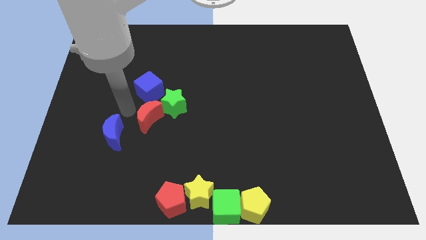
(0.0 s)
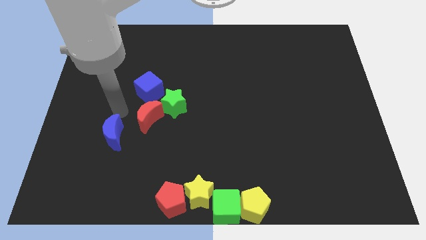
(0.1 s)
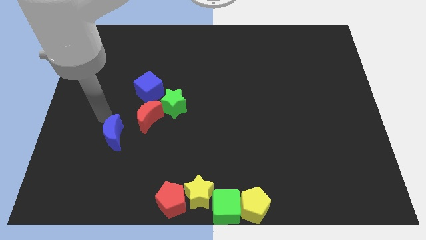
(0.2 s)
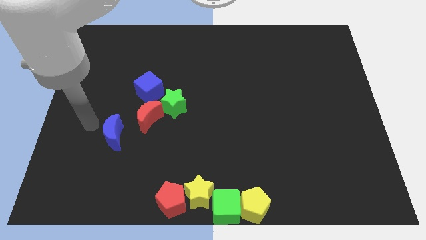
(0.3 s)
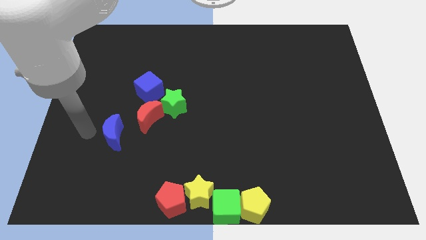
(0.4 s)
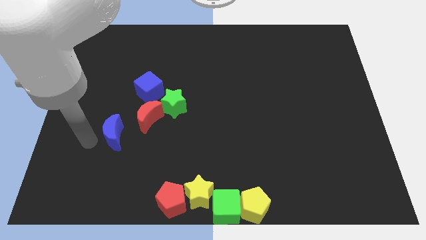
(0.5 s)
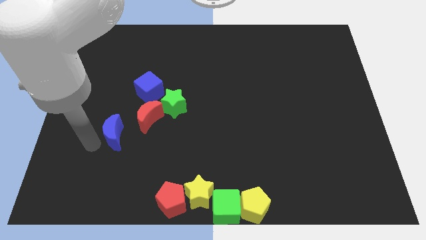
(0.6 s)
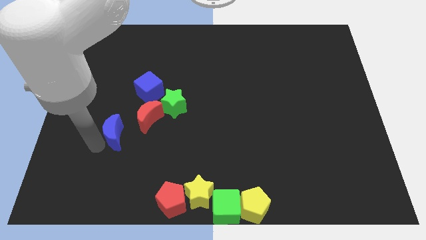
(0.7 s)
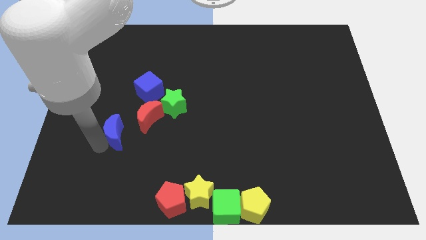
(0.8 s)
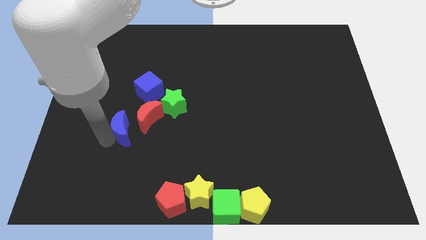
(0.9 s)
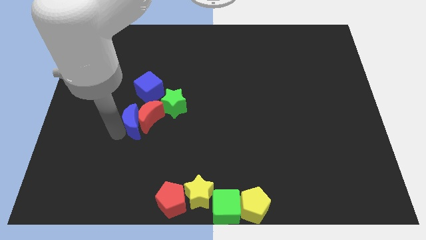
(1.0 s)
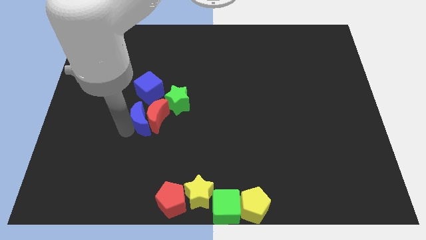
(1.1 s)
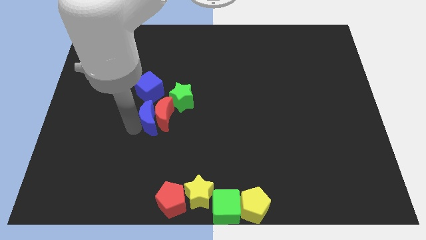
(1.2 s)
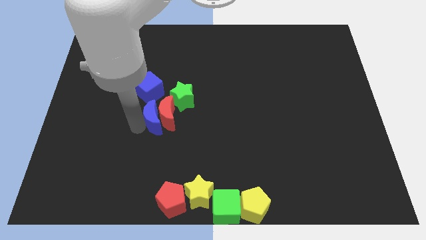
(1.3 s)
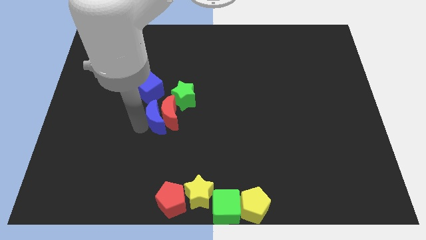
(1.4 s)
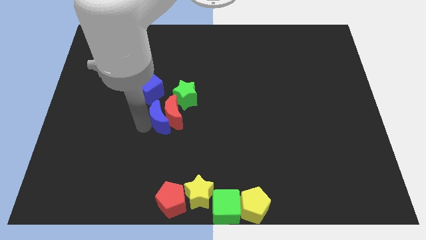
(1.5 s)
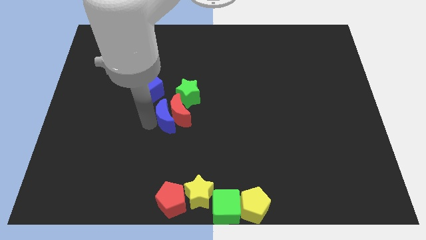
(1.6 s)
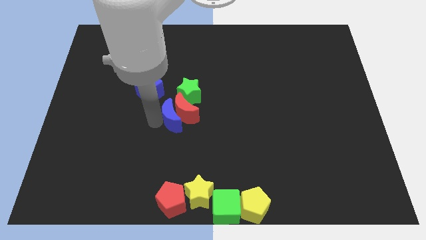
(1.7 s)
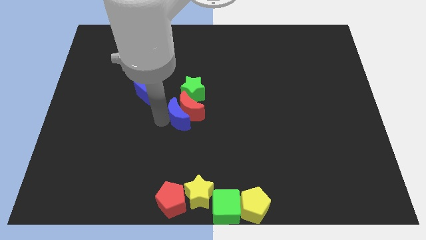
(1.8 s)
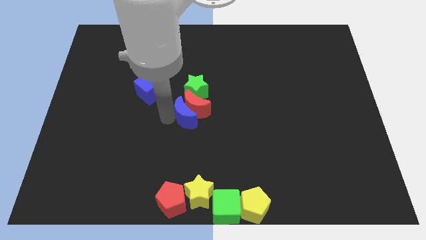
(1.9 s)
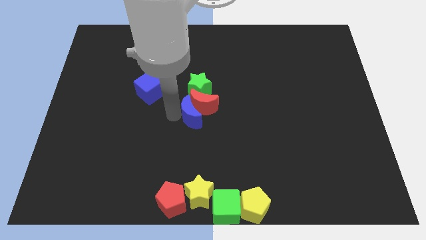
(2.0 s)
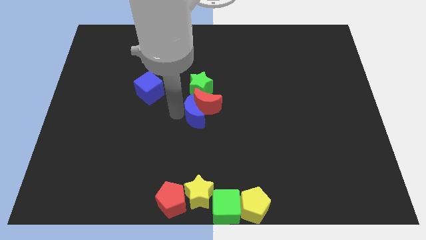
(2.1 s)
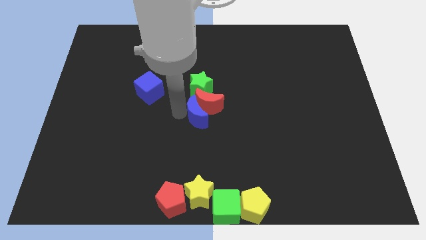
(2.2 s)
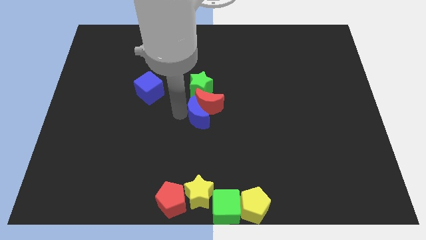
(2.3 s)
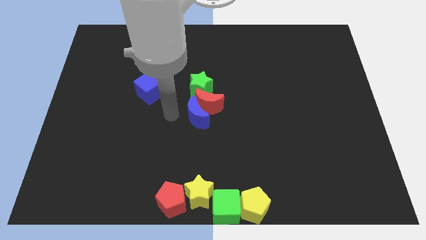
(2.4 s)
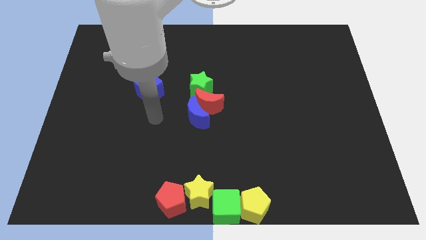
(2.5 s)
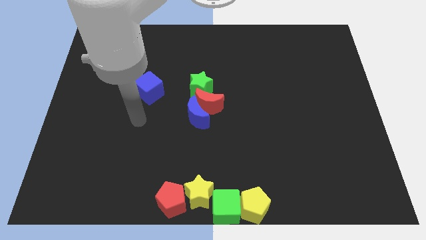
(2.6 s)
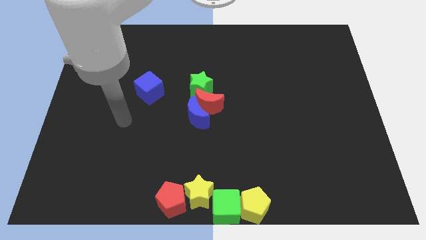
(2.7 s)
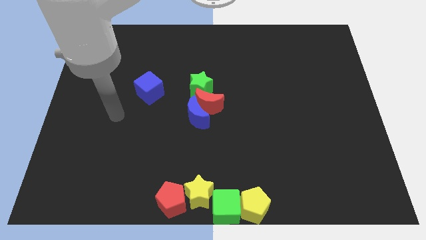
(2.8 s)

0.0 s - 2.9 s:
move red crescent to the center of the board along with green star and blue cube

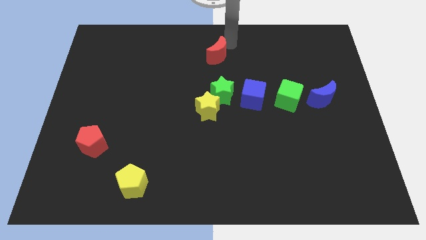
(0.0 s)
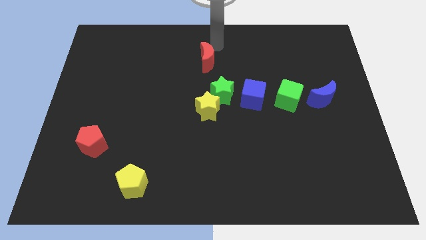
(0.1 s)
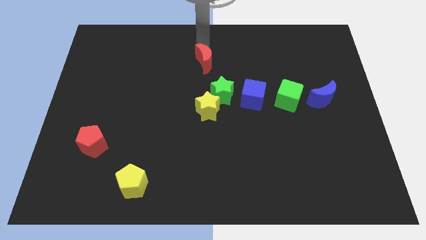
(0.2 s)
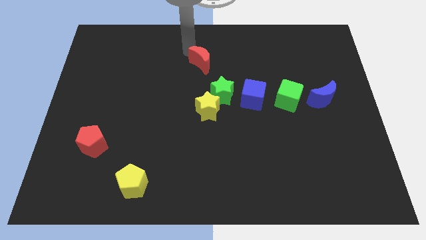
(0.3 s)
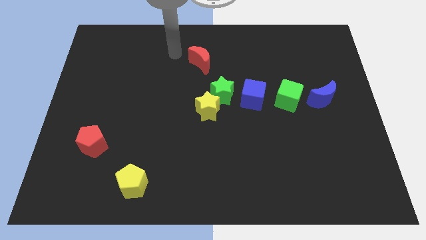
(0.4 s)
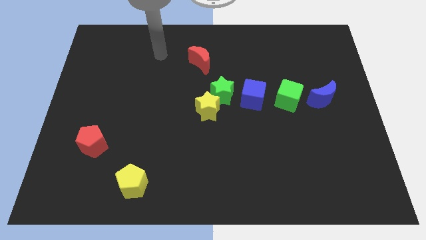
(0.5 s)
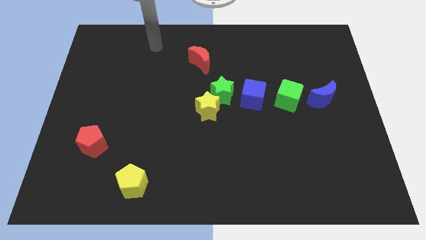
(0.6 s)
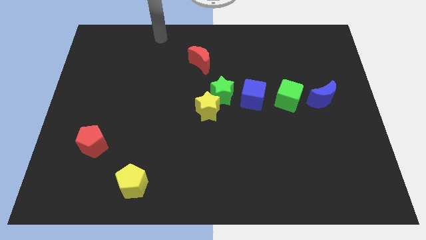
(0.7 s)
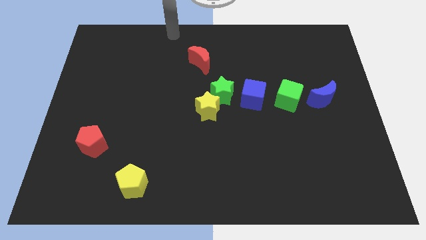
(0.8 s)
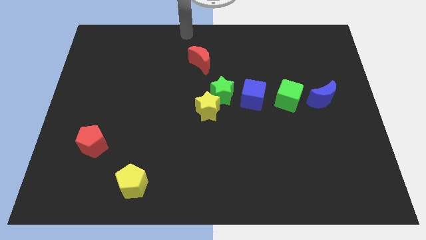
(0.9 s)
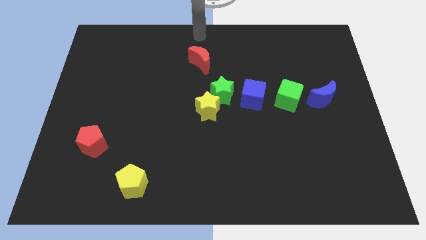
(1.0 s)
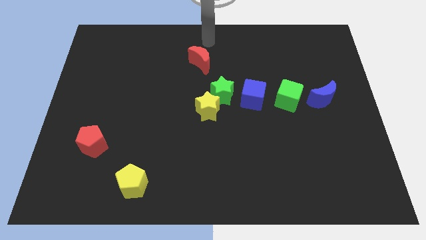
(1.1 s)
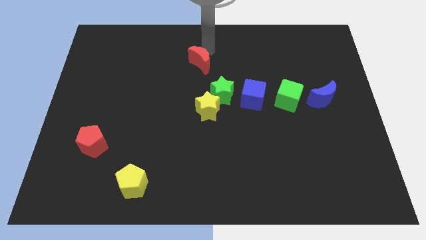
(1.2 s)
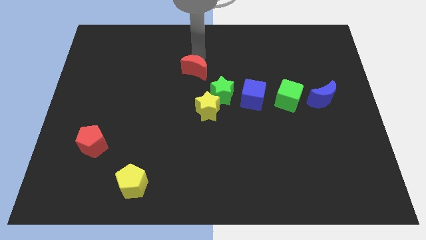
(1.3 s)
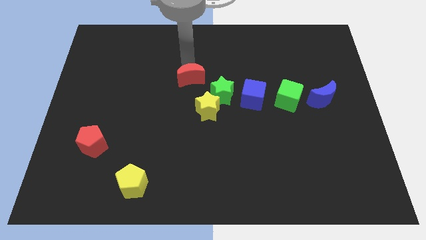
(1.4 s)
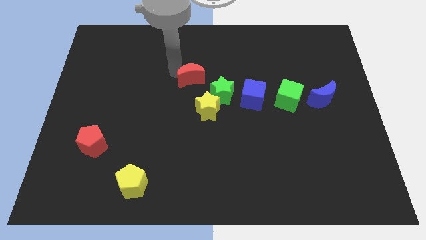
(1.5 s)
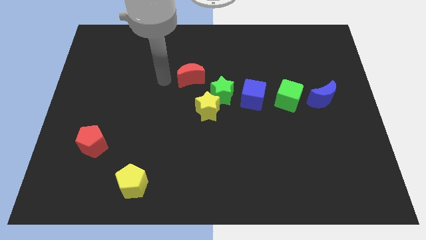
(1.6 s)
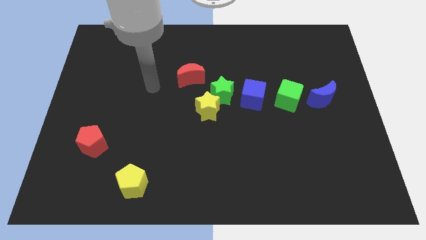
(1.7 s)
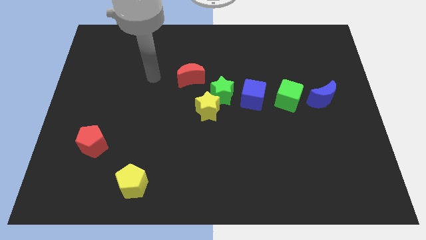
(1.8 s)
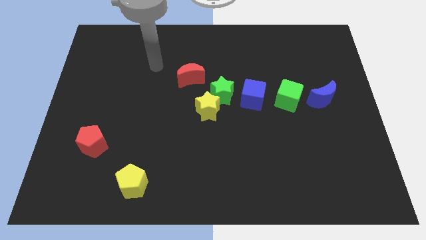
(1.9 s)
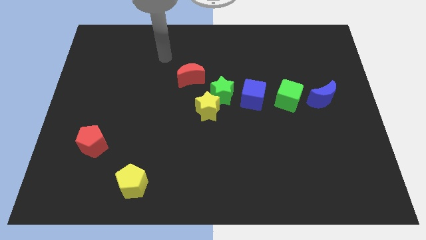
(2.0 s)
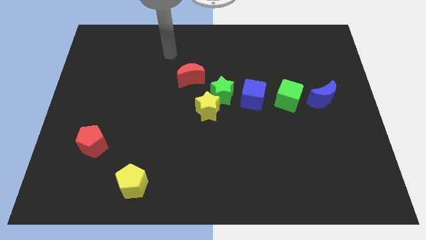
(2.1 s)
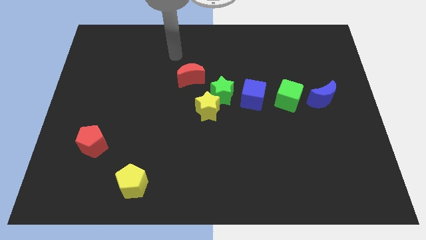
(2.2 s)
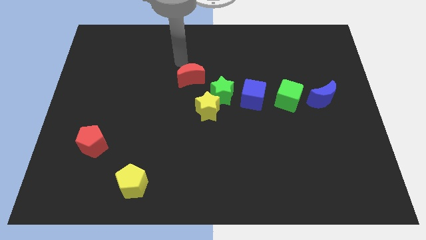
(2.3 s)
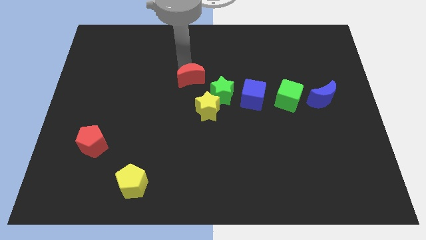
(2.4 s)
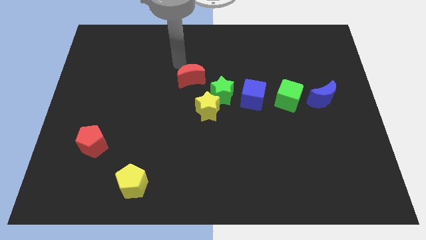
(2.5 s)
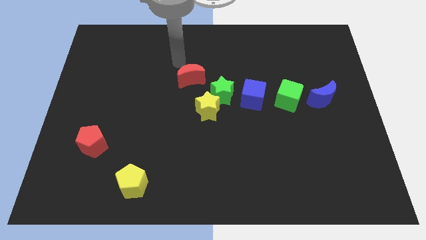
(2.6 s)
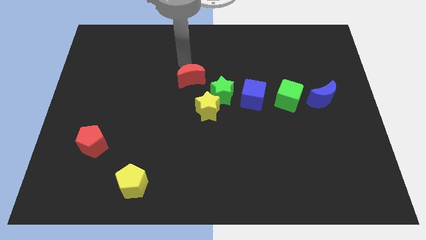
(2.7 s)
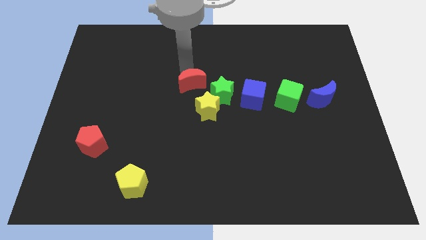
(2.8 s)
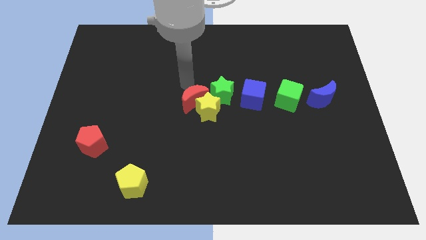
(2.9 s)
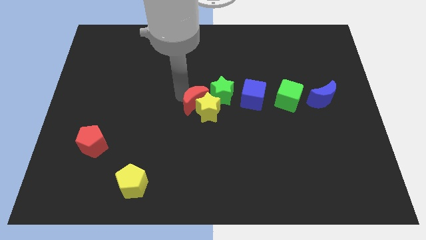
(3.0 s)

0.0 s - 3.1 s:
push red crescent towards down

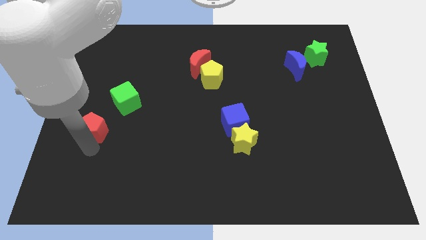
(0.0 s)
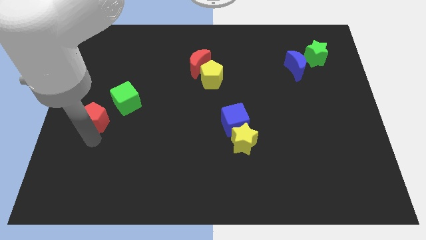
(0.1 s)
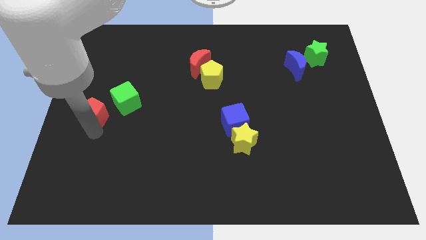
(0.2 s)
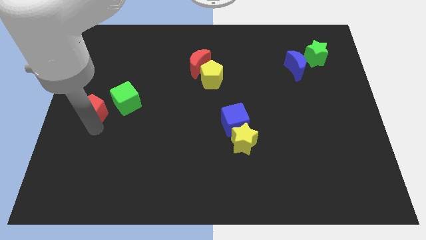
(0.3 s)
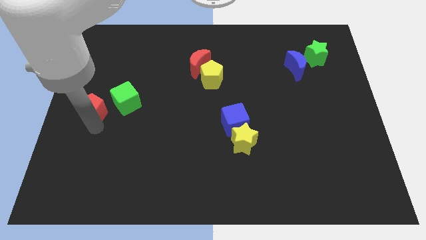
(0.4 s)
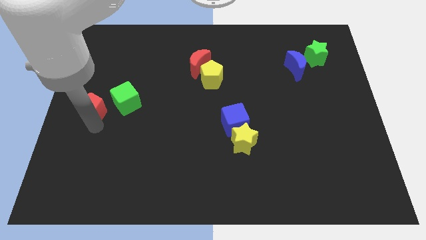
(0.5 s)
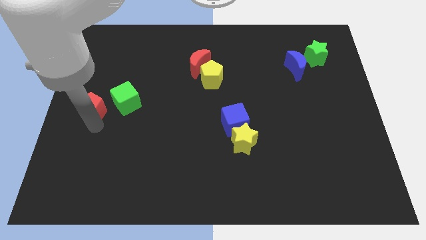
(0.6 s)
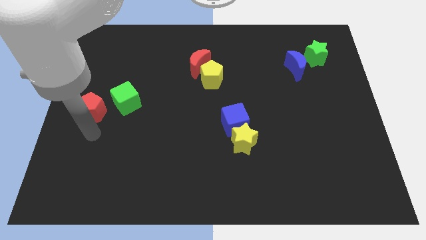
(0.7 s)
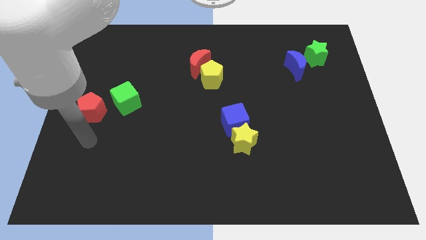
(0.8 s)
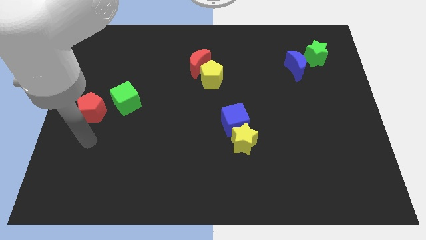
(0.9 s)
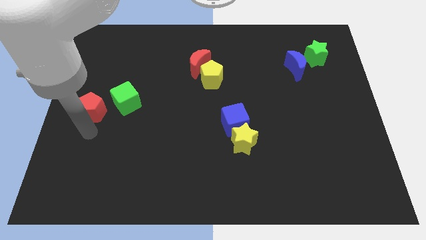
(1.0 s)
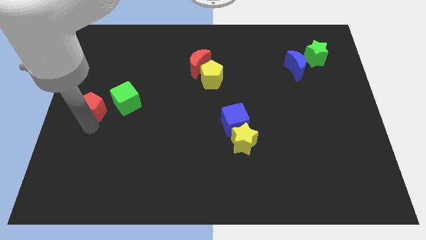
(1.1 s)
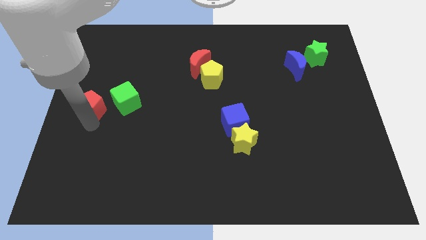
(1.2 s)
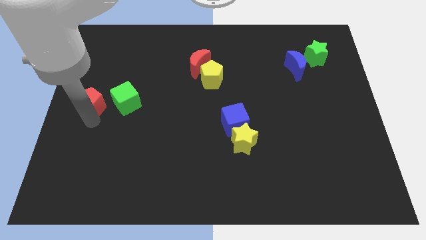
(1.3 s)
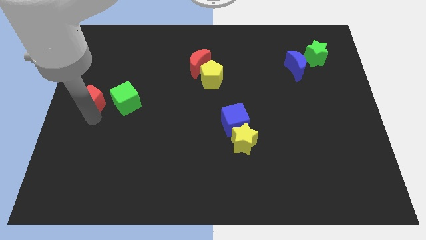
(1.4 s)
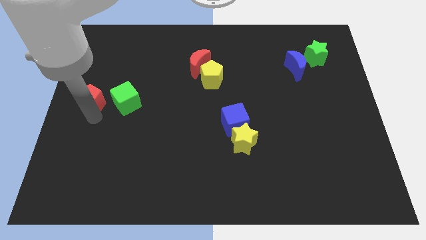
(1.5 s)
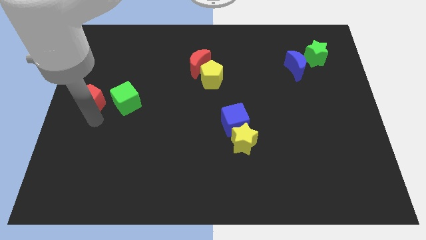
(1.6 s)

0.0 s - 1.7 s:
place the red pentagon towards the left side of the green cube

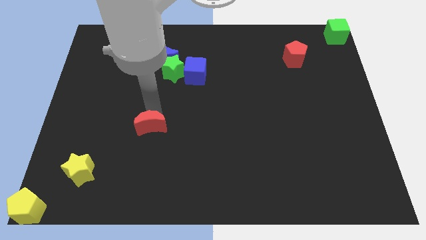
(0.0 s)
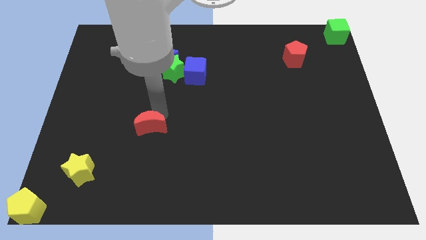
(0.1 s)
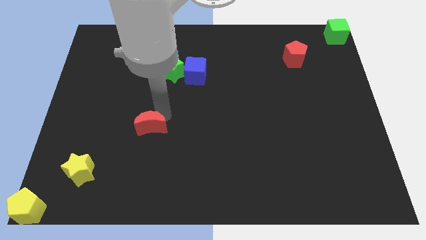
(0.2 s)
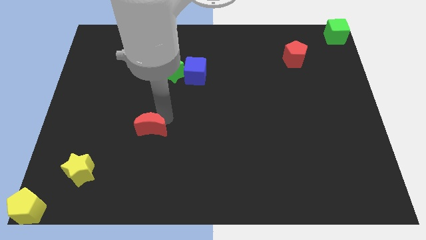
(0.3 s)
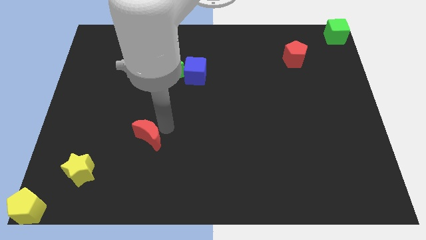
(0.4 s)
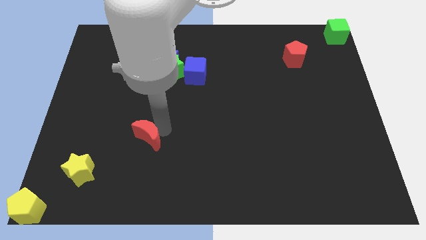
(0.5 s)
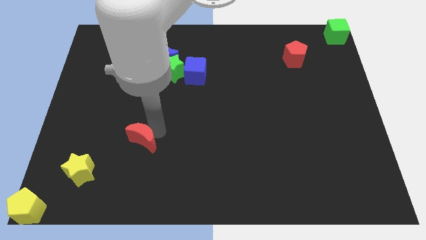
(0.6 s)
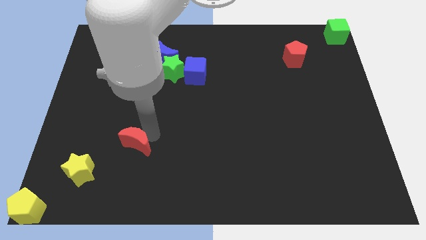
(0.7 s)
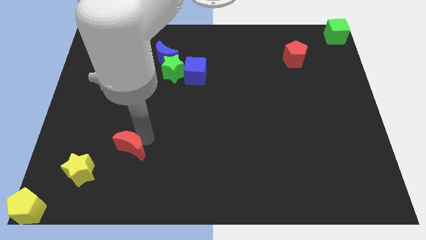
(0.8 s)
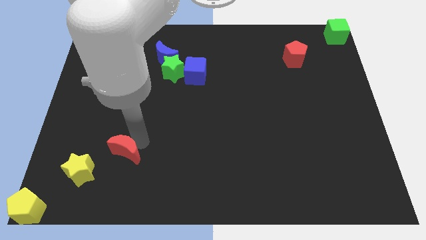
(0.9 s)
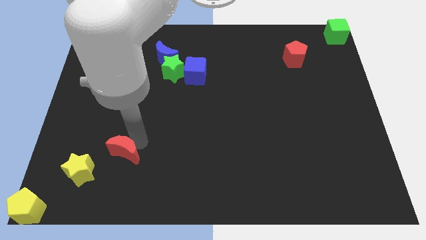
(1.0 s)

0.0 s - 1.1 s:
push the red moon diagonally to the yellow star

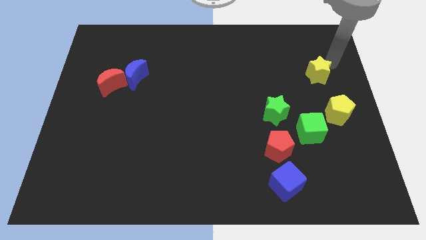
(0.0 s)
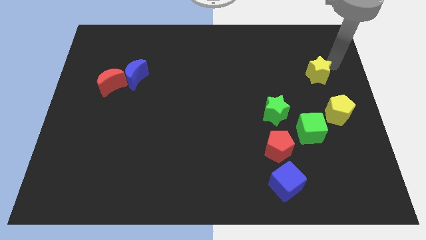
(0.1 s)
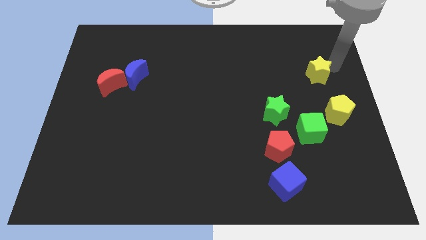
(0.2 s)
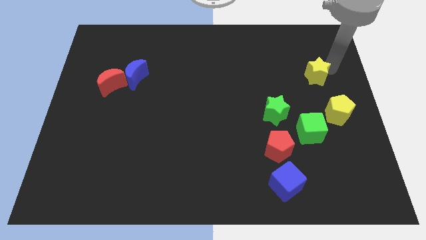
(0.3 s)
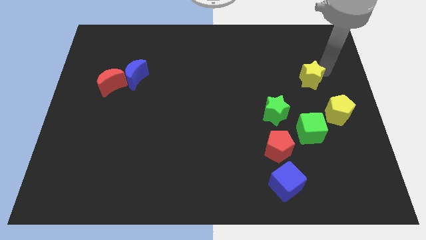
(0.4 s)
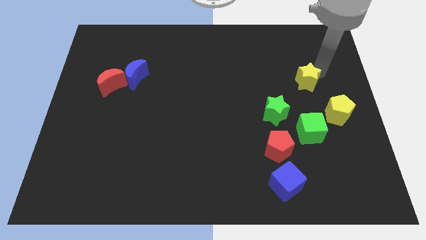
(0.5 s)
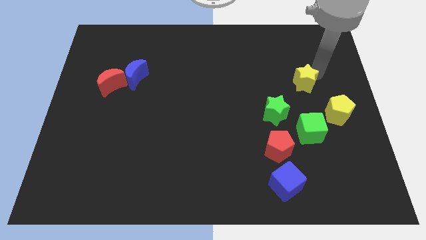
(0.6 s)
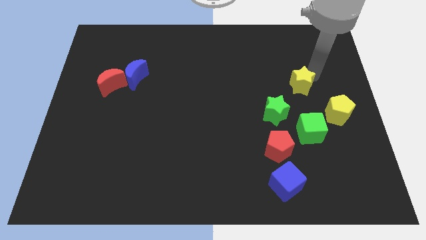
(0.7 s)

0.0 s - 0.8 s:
push yellow star above green cube
